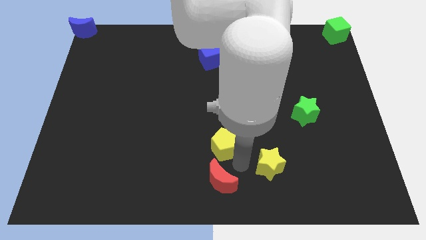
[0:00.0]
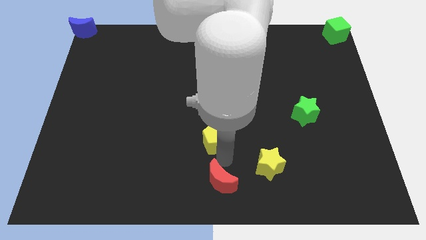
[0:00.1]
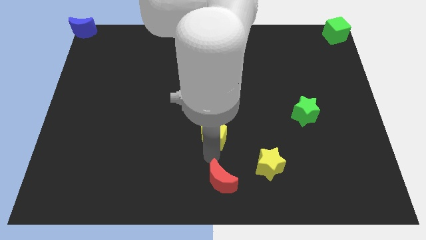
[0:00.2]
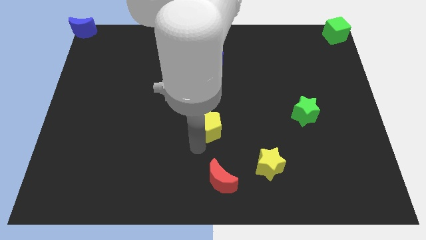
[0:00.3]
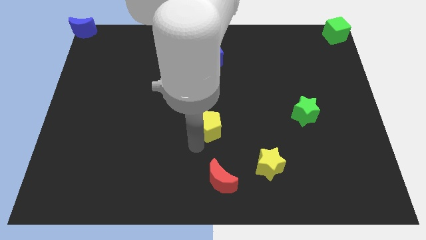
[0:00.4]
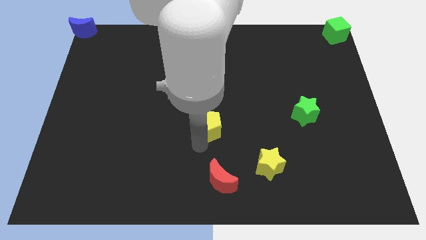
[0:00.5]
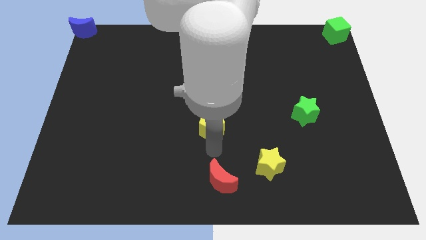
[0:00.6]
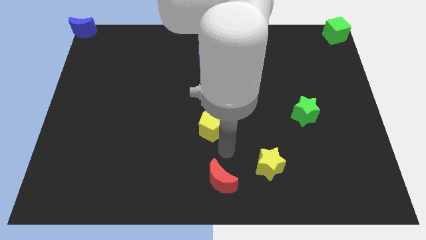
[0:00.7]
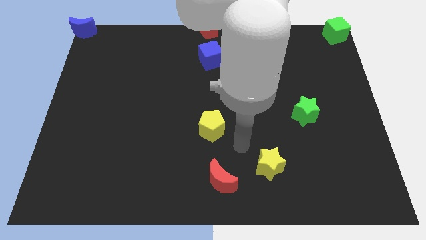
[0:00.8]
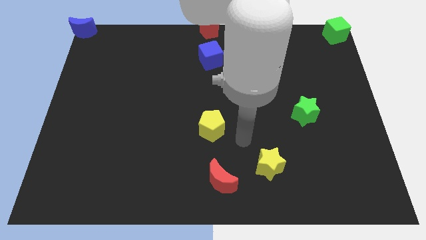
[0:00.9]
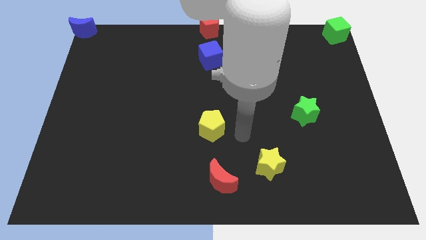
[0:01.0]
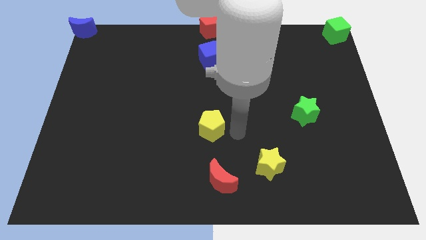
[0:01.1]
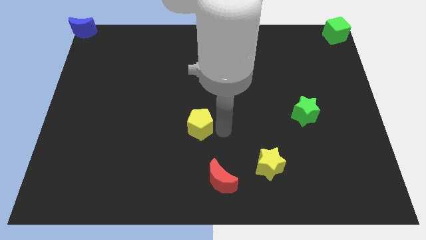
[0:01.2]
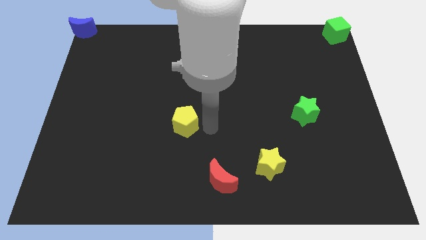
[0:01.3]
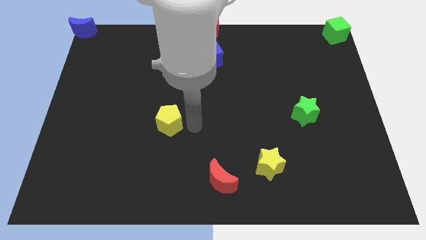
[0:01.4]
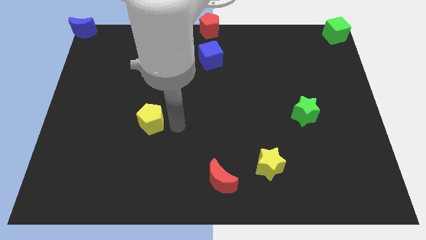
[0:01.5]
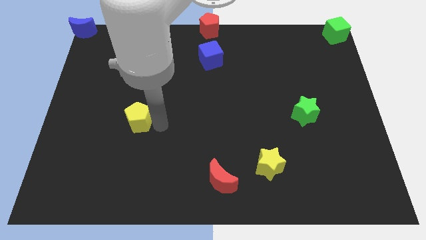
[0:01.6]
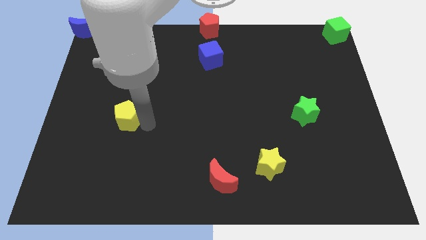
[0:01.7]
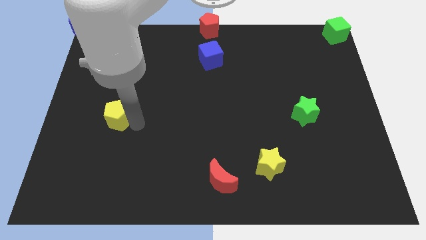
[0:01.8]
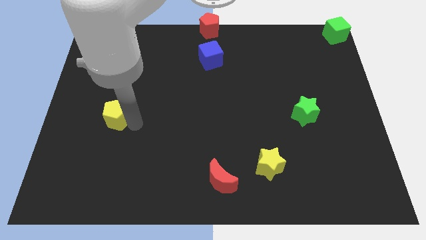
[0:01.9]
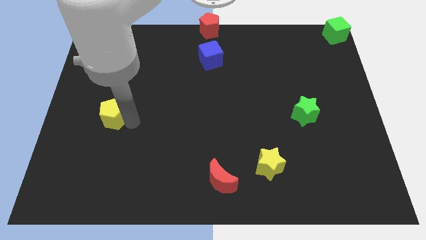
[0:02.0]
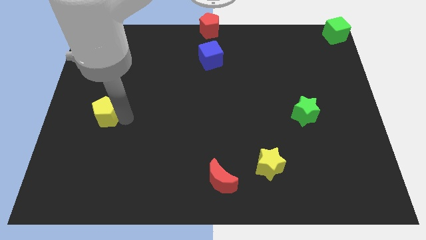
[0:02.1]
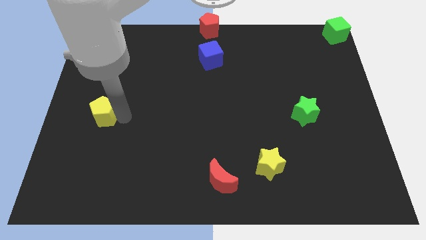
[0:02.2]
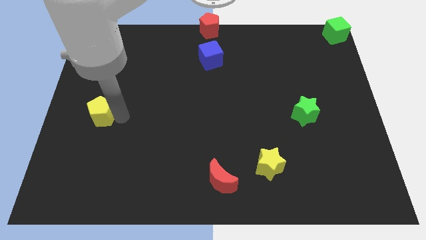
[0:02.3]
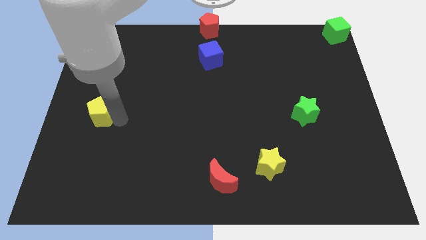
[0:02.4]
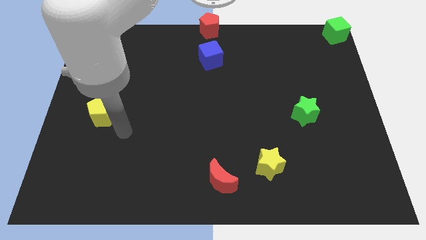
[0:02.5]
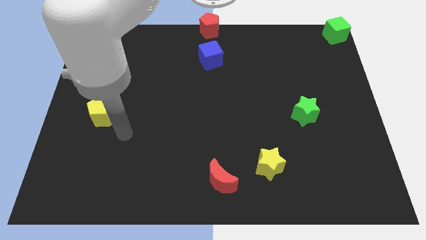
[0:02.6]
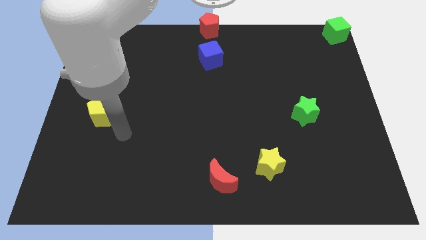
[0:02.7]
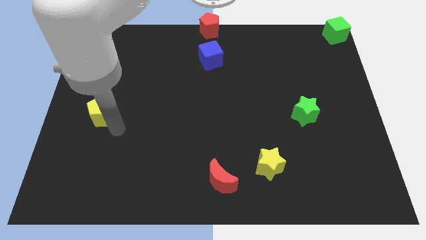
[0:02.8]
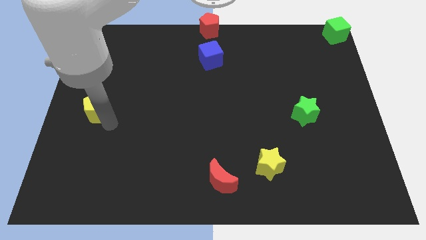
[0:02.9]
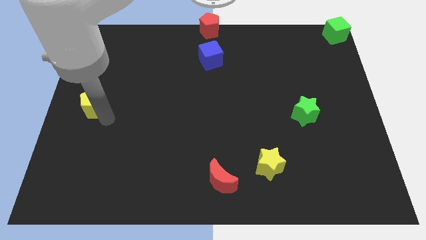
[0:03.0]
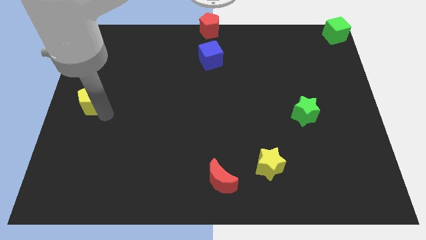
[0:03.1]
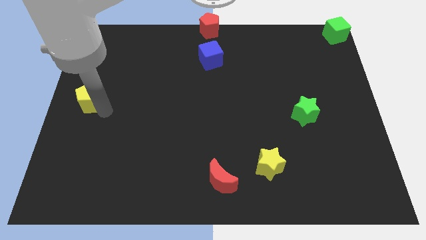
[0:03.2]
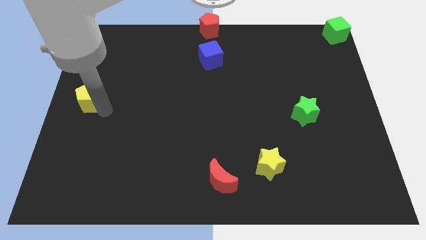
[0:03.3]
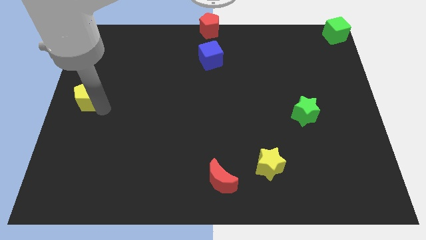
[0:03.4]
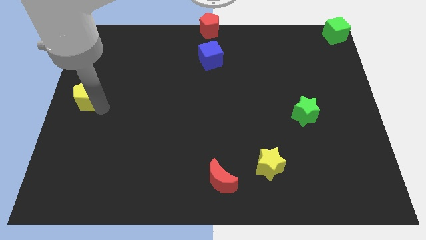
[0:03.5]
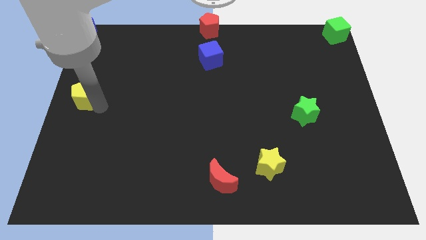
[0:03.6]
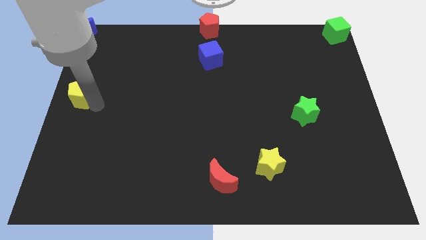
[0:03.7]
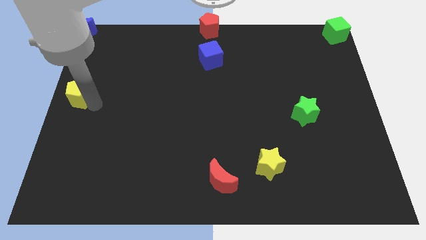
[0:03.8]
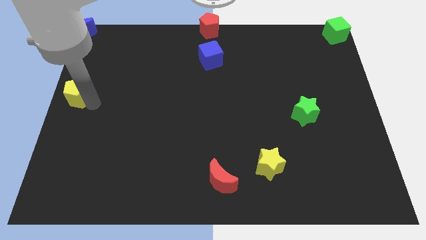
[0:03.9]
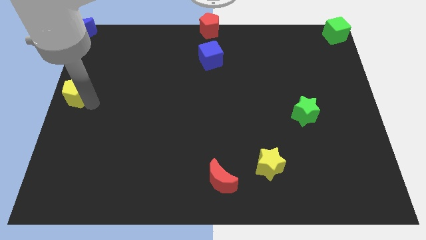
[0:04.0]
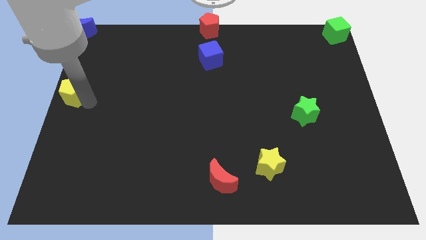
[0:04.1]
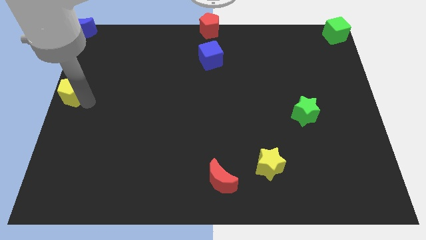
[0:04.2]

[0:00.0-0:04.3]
move the yellow pentagon to the left center of the board

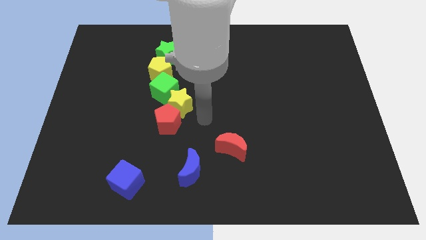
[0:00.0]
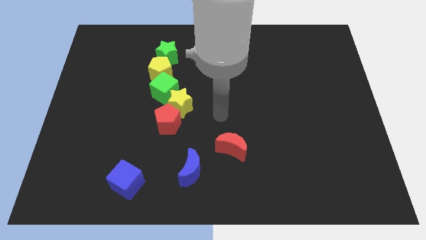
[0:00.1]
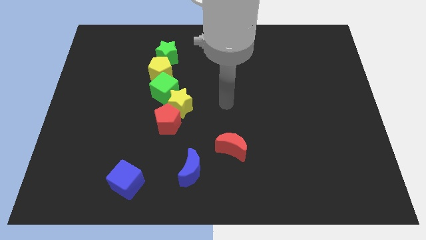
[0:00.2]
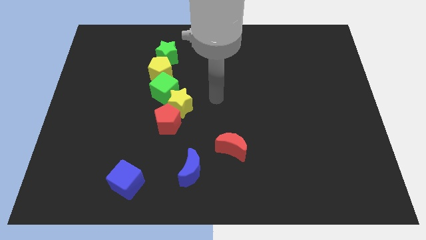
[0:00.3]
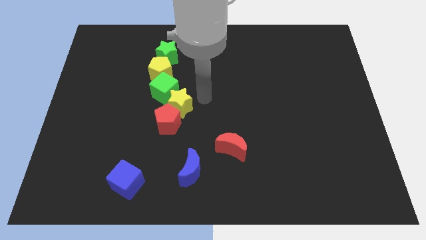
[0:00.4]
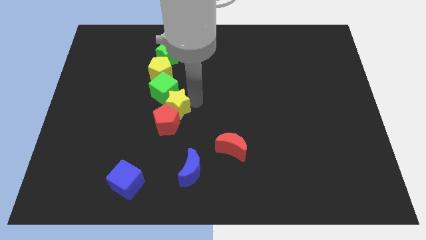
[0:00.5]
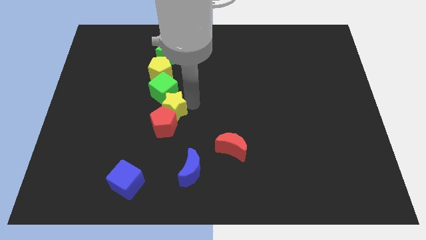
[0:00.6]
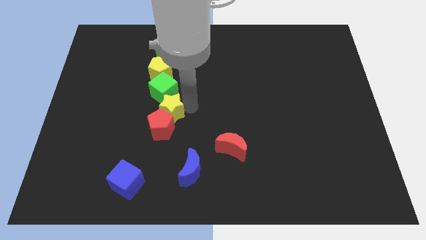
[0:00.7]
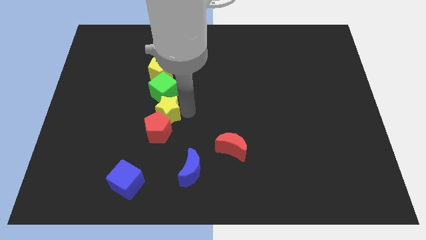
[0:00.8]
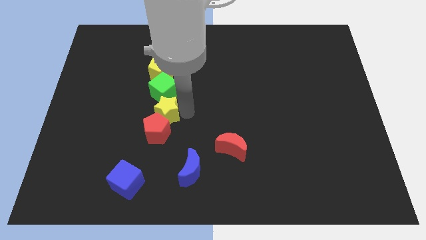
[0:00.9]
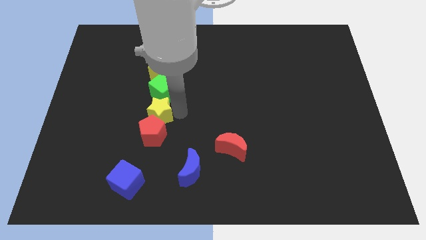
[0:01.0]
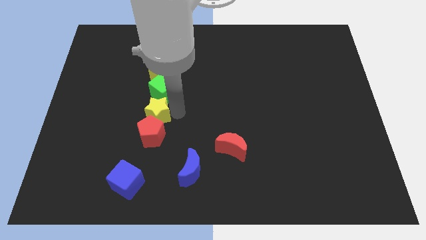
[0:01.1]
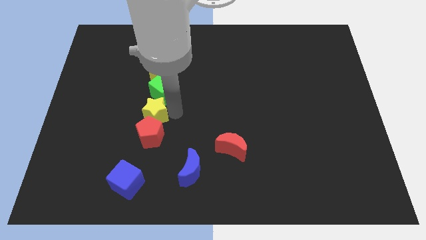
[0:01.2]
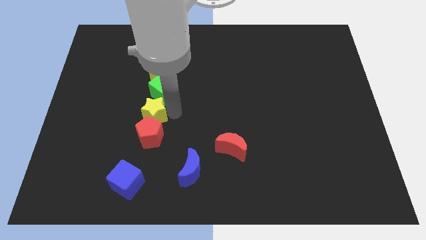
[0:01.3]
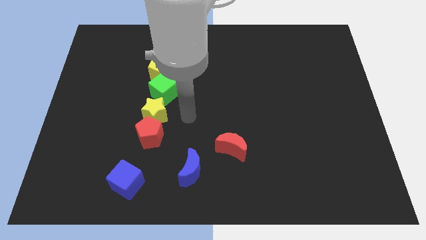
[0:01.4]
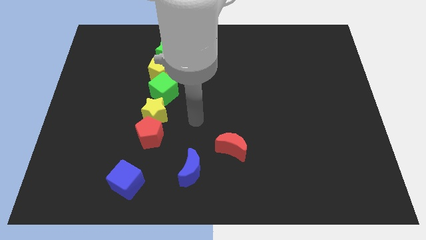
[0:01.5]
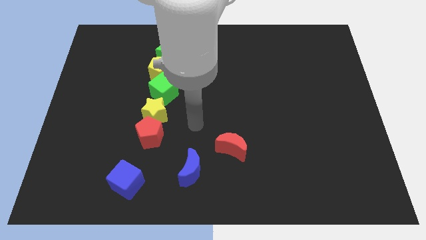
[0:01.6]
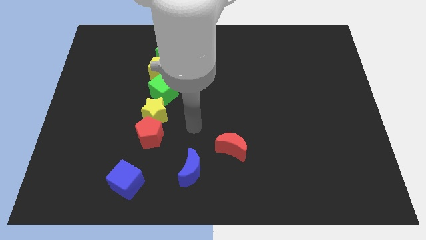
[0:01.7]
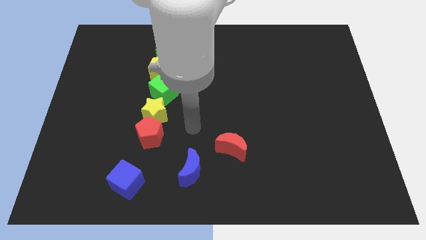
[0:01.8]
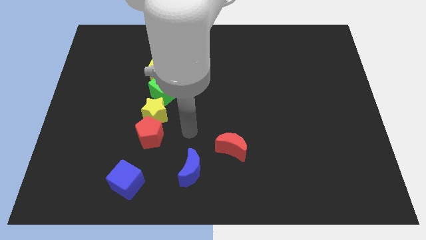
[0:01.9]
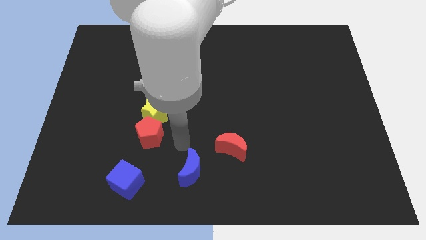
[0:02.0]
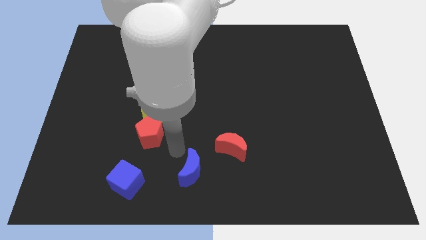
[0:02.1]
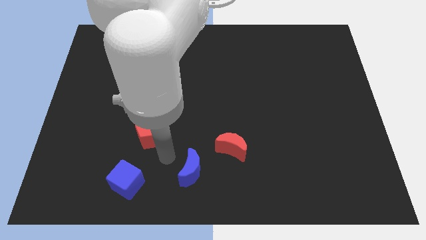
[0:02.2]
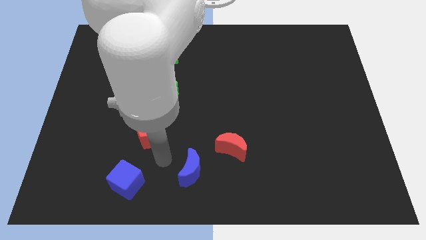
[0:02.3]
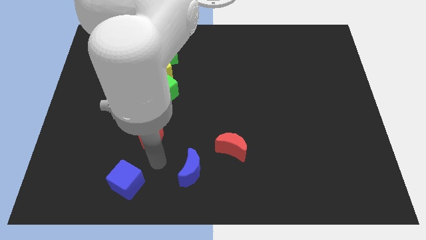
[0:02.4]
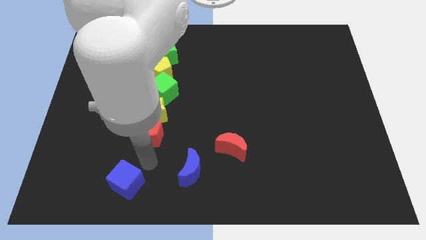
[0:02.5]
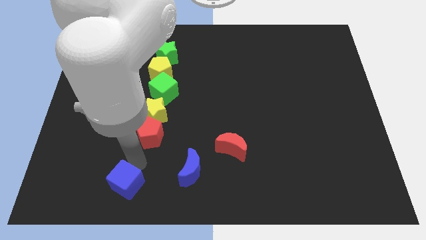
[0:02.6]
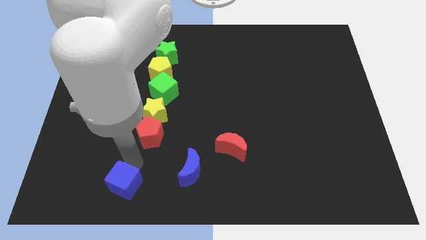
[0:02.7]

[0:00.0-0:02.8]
place the yellow star in between the green cube and red pentagon

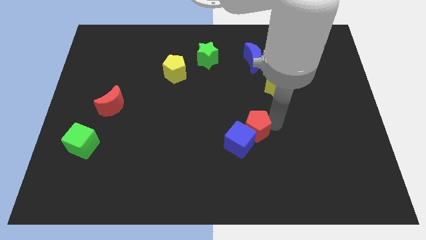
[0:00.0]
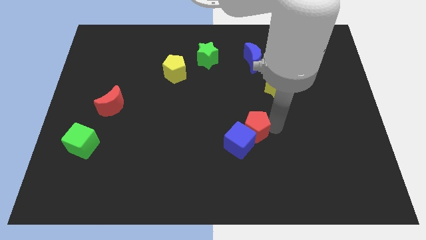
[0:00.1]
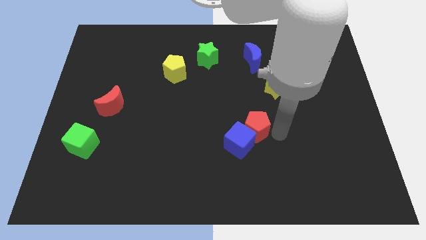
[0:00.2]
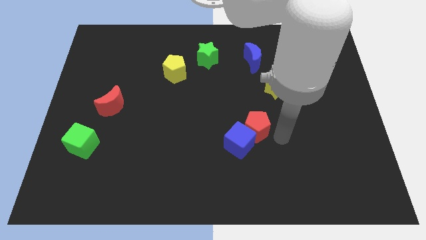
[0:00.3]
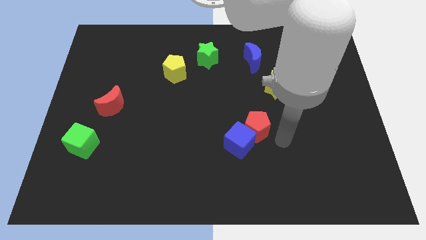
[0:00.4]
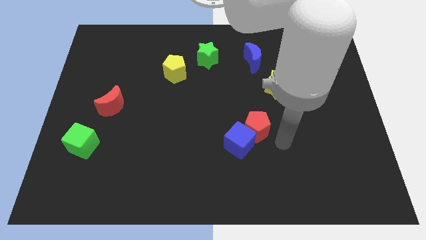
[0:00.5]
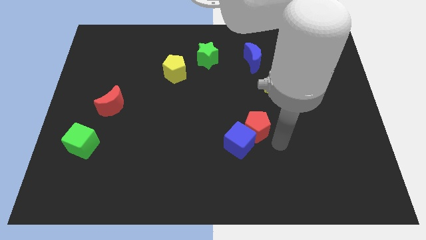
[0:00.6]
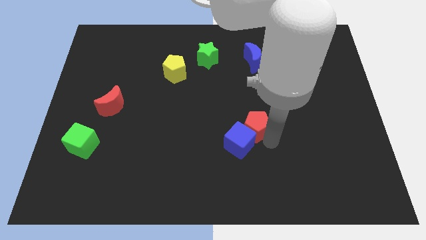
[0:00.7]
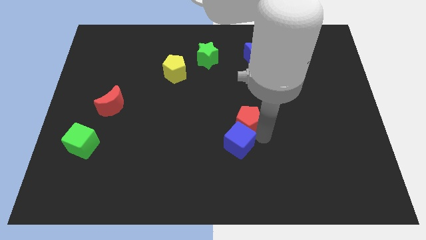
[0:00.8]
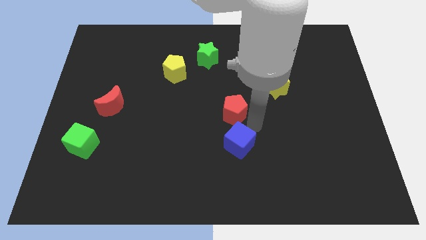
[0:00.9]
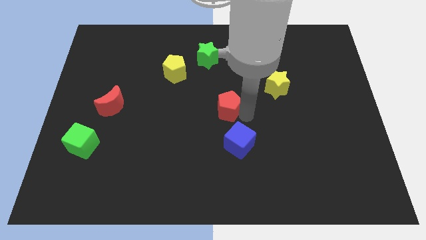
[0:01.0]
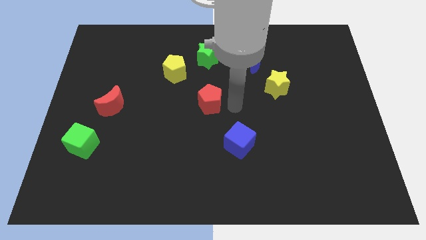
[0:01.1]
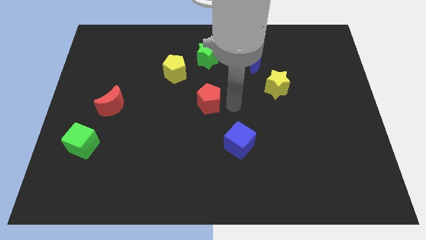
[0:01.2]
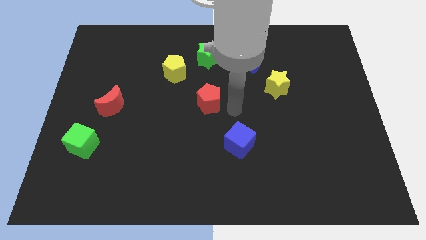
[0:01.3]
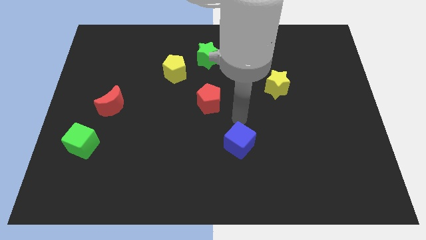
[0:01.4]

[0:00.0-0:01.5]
place the red pentagon to the centre of the board

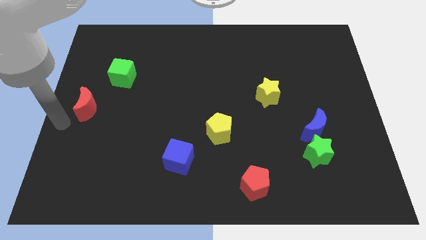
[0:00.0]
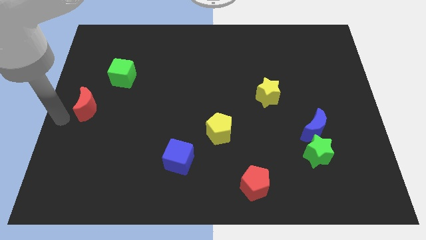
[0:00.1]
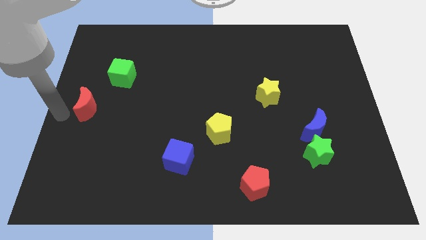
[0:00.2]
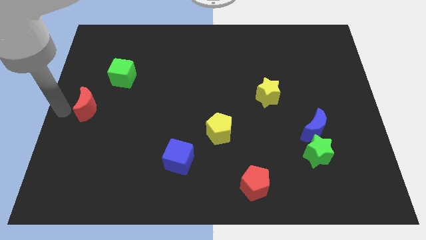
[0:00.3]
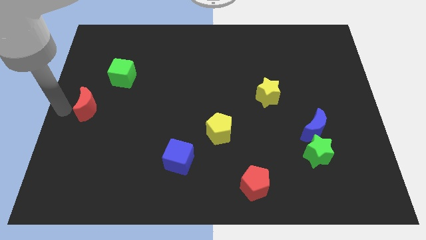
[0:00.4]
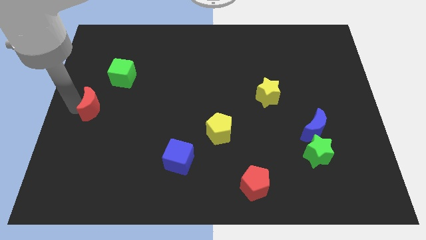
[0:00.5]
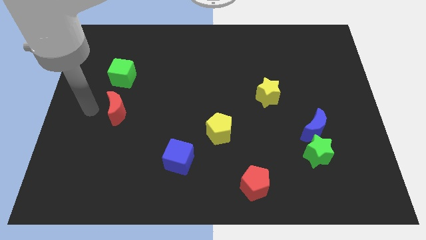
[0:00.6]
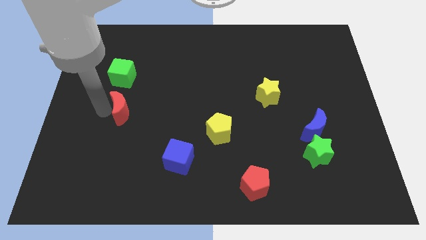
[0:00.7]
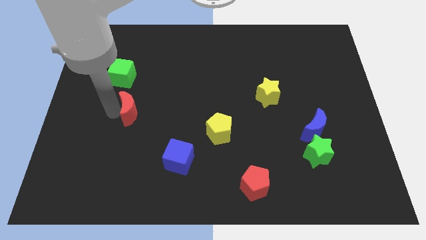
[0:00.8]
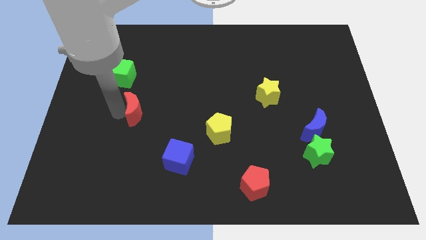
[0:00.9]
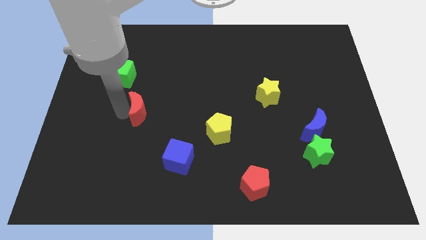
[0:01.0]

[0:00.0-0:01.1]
place the red moon in between the green cube and blue cube
